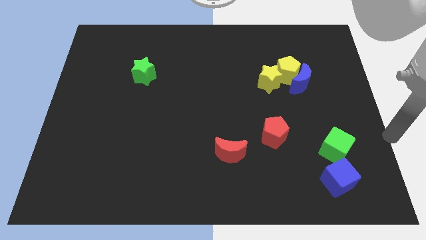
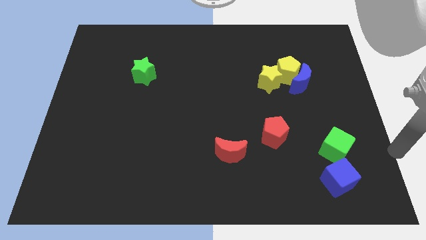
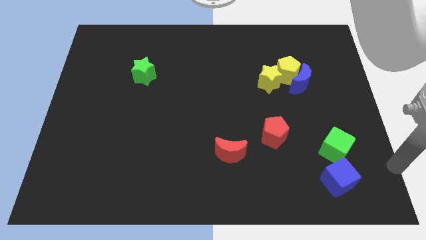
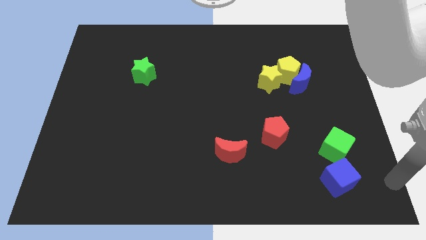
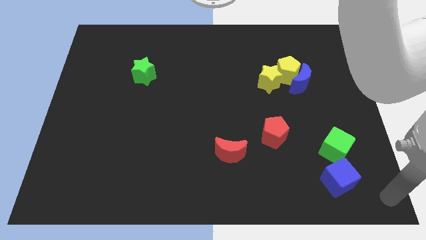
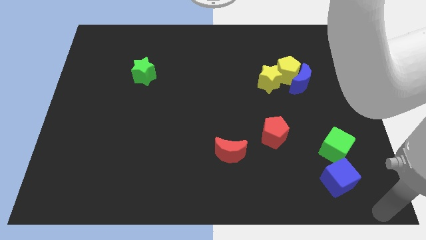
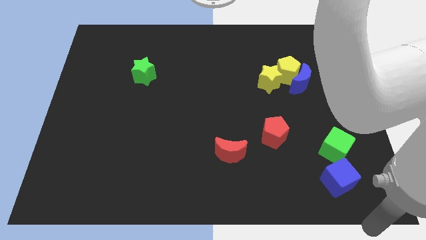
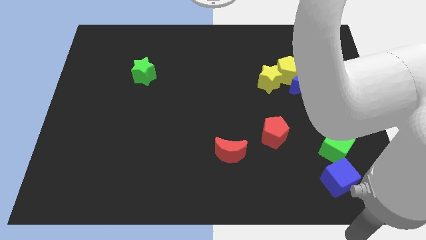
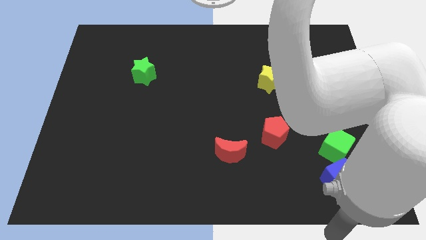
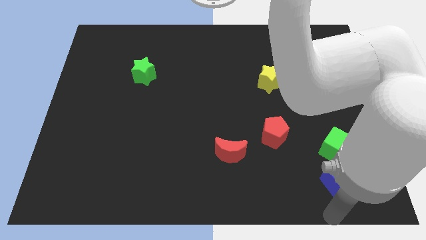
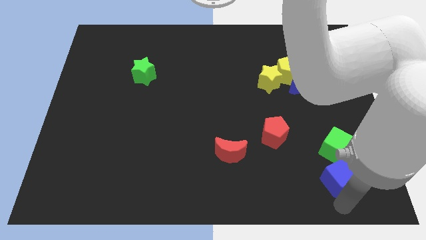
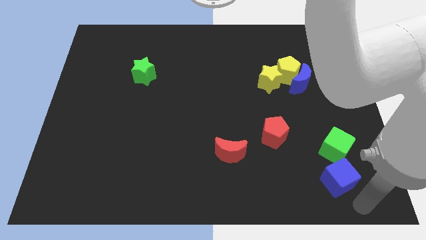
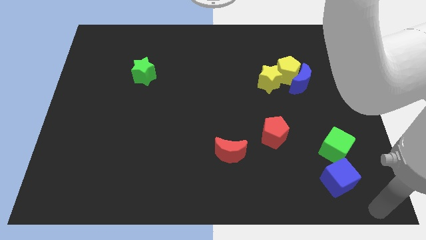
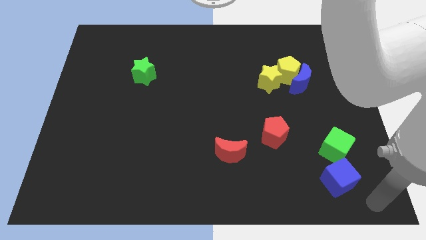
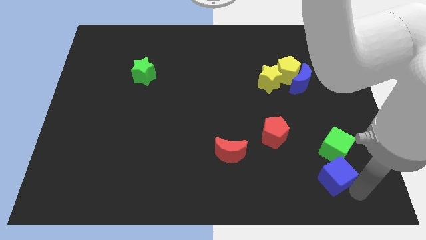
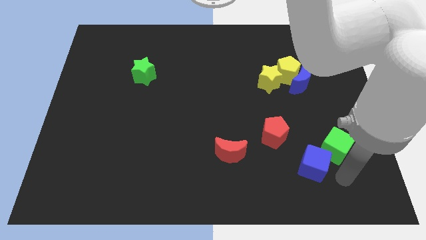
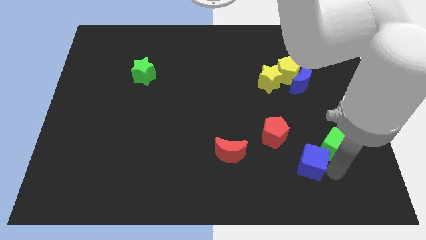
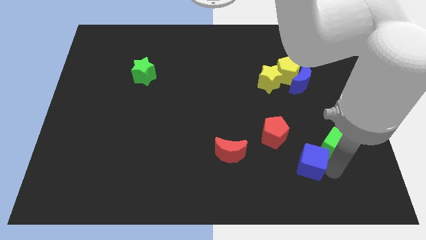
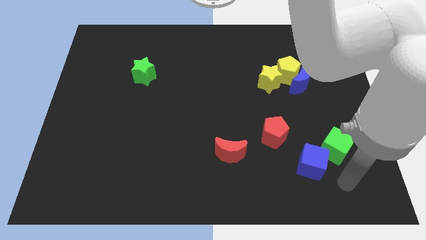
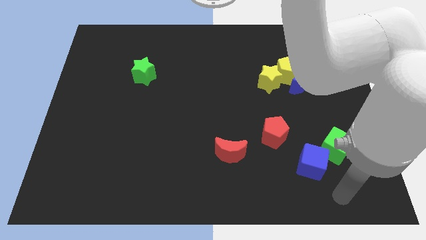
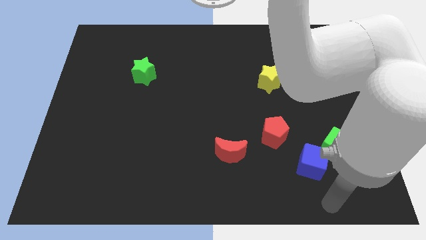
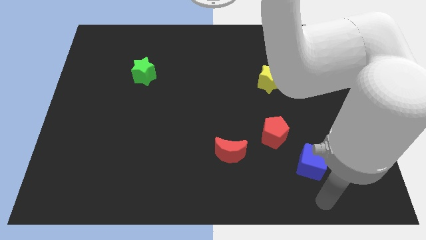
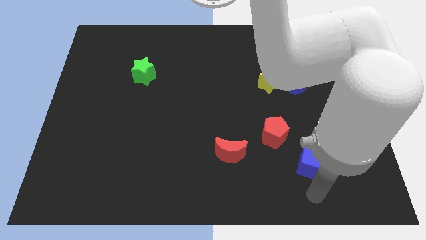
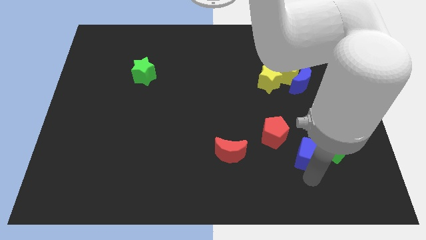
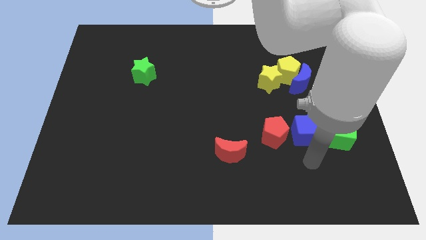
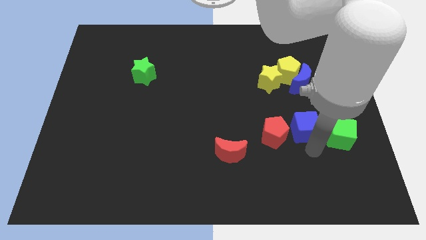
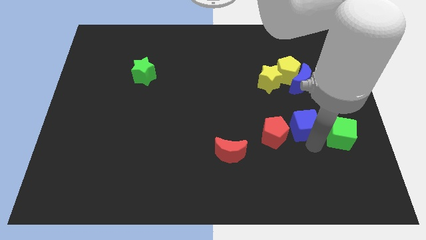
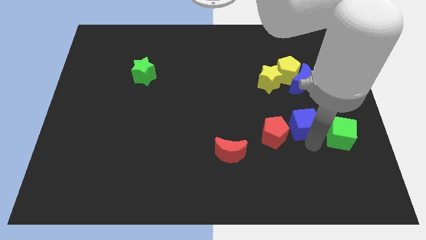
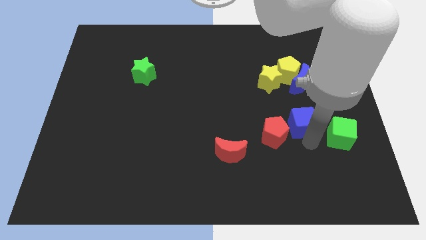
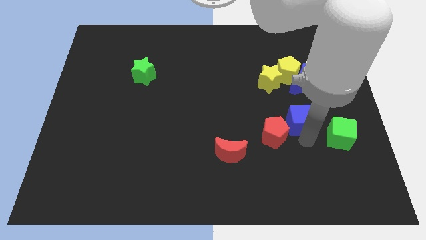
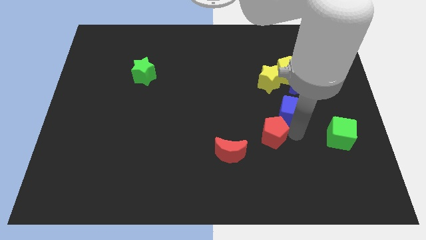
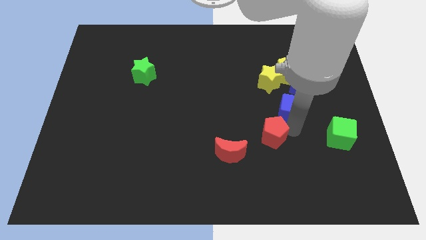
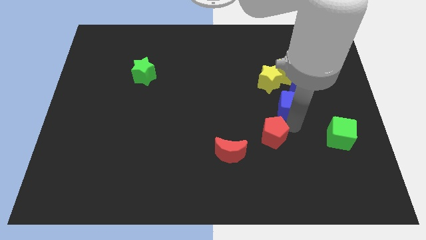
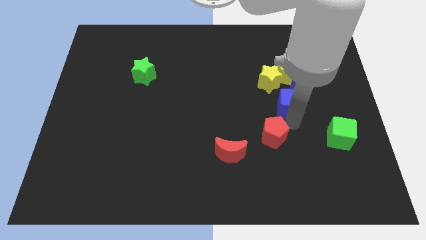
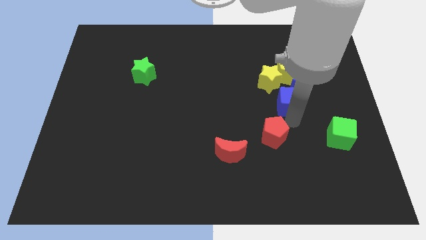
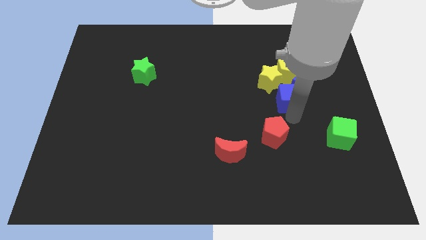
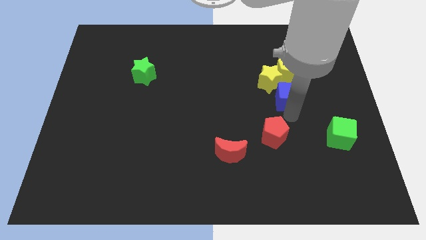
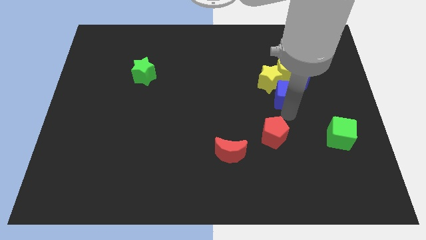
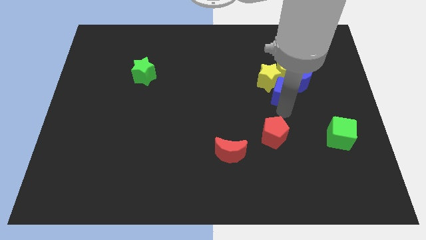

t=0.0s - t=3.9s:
move the blue cube to the bottom yellow pentagon

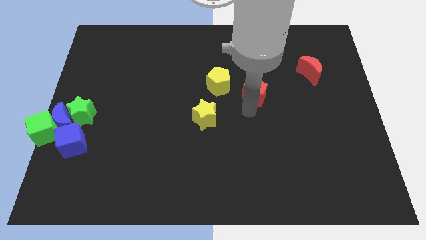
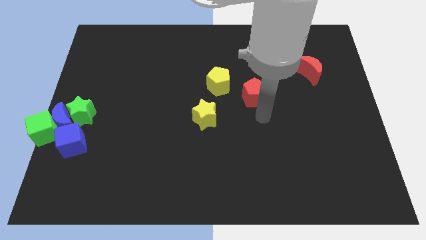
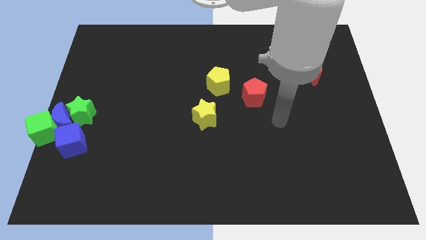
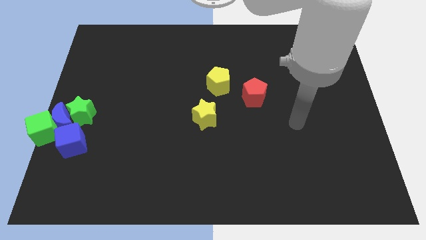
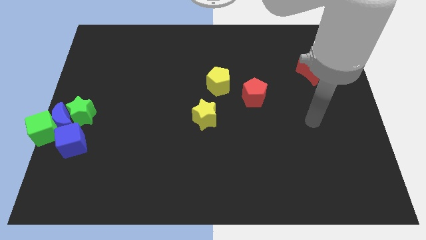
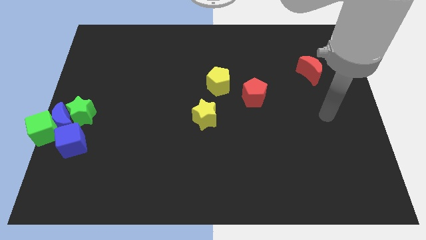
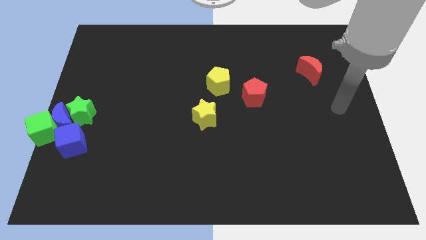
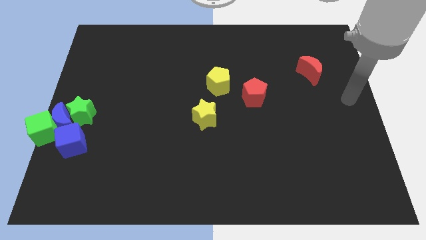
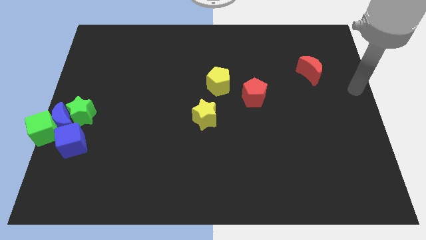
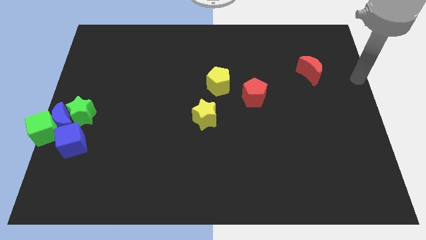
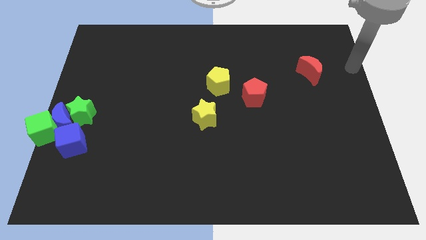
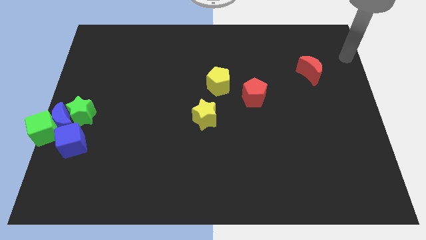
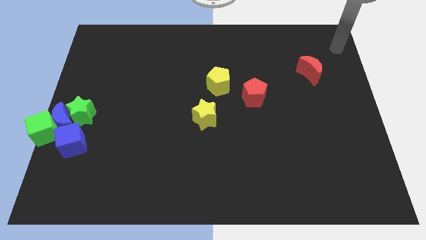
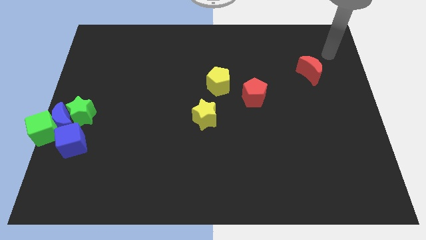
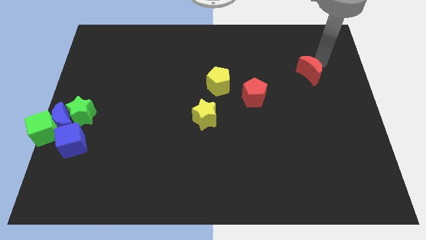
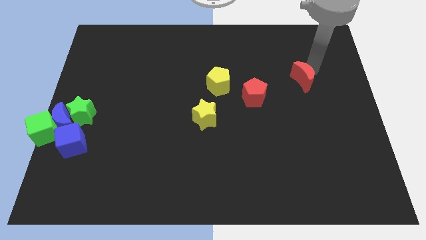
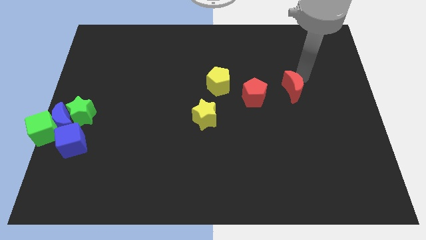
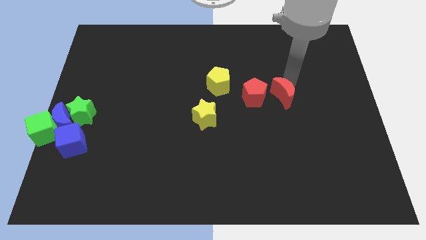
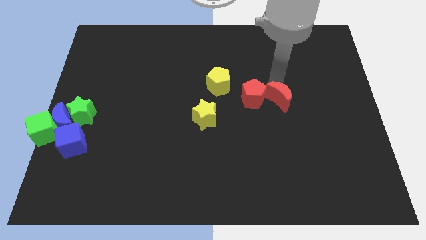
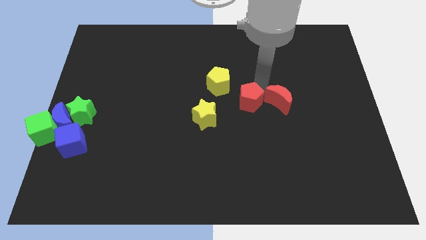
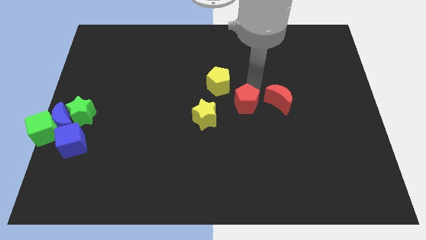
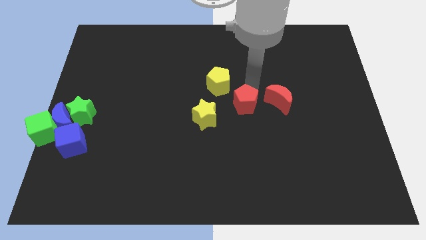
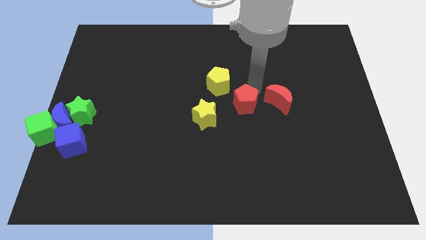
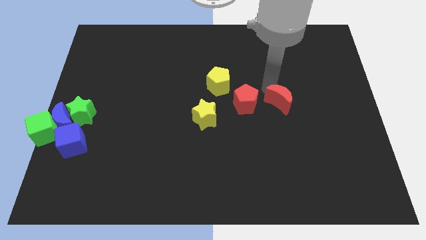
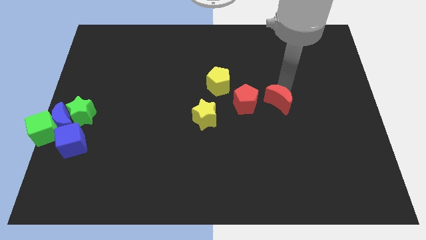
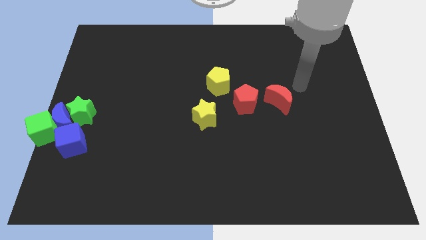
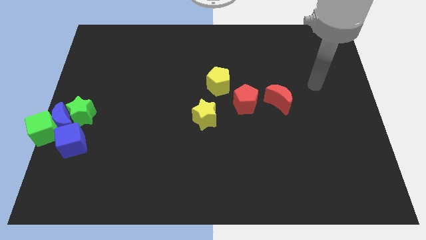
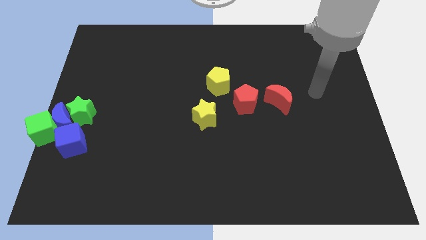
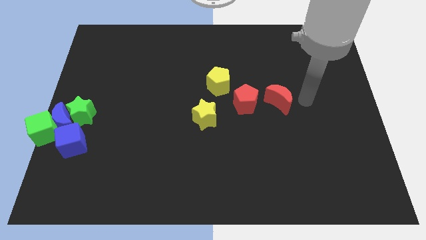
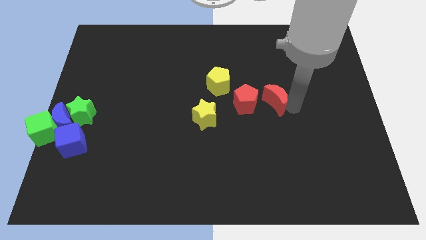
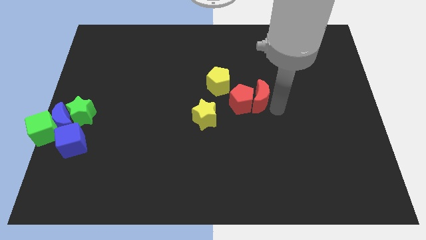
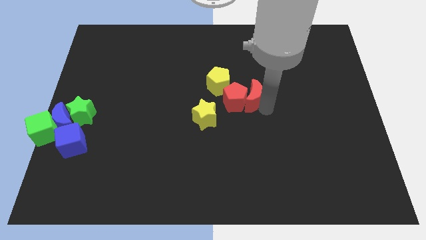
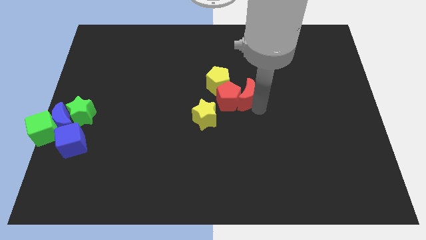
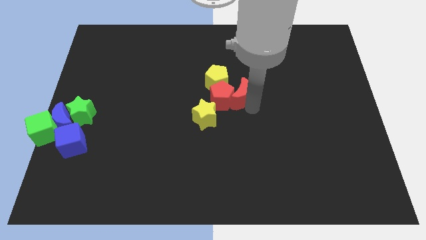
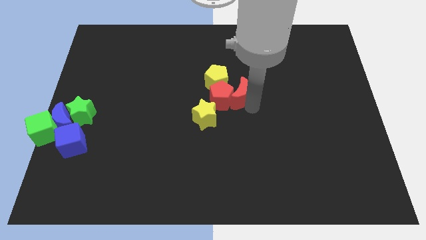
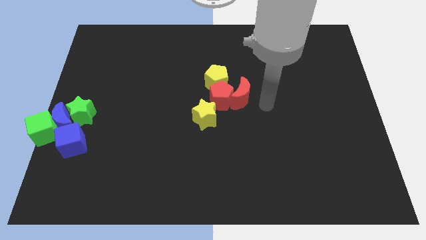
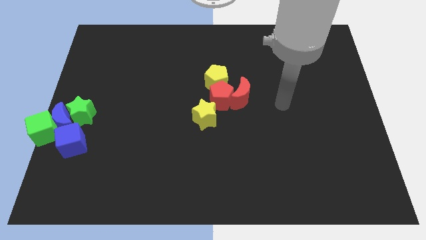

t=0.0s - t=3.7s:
push the red moon into the red pentagon

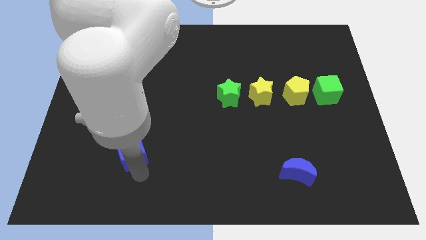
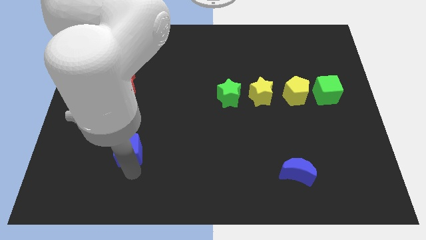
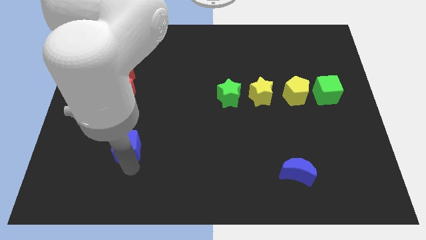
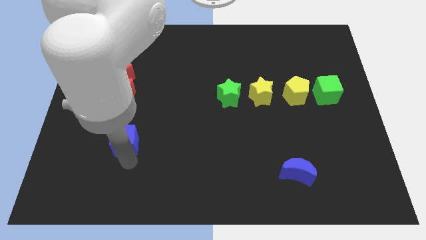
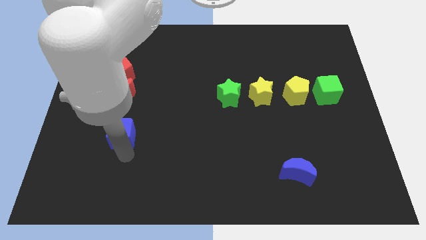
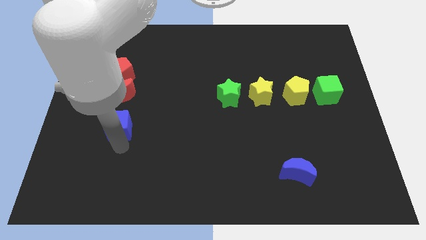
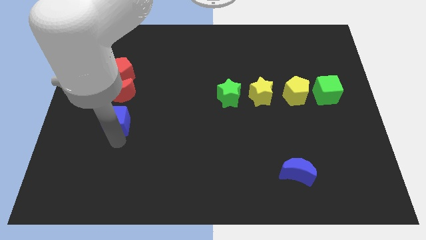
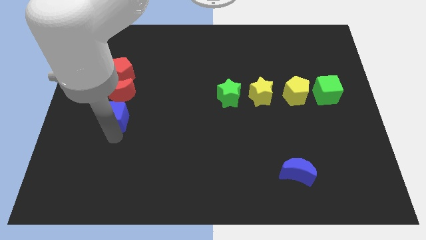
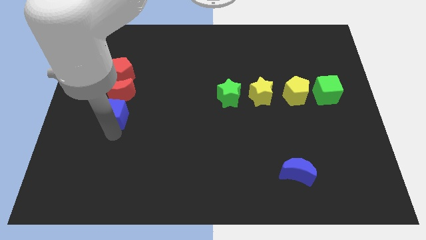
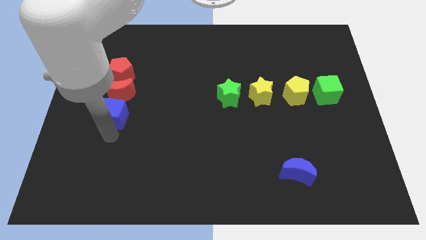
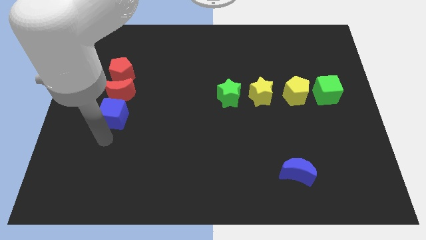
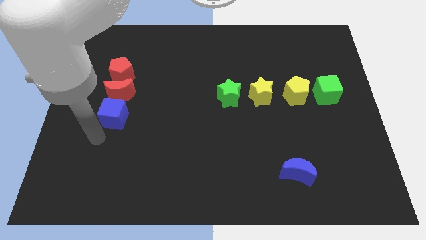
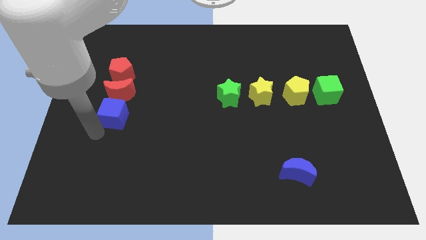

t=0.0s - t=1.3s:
place the blue cube below the red crescent

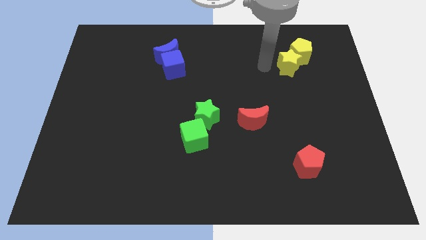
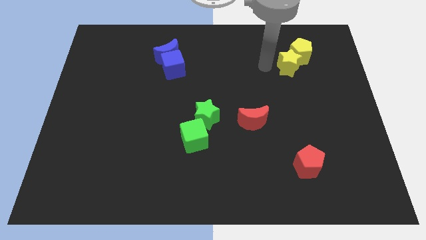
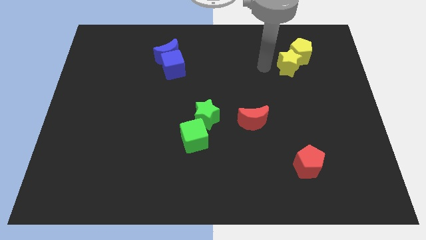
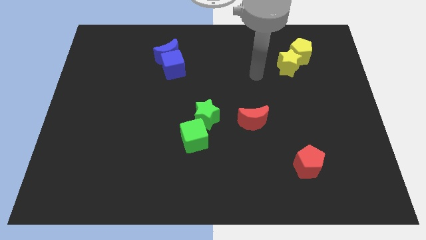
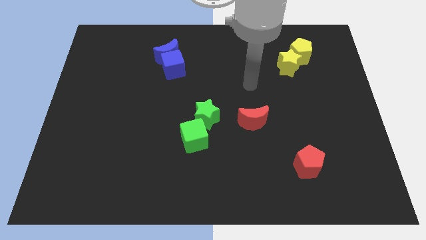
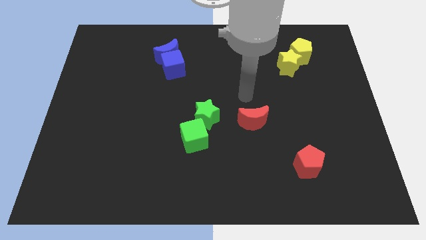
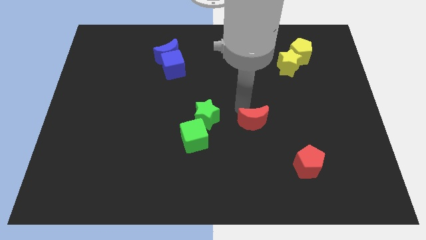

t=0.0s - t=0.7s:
point your arm to the top of the red crescent
